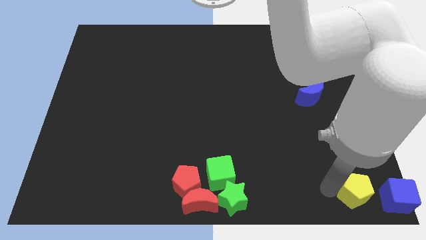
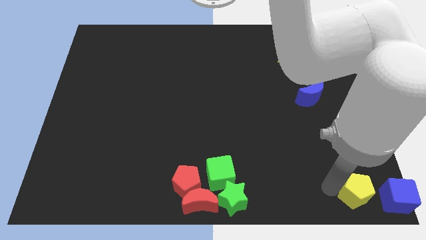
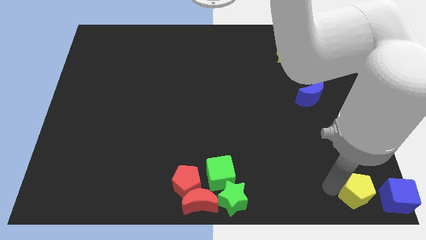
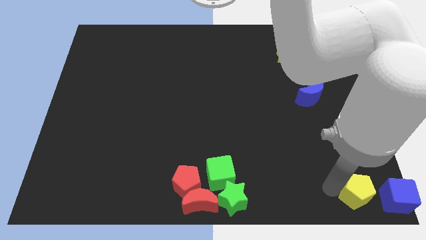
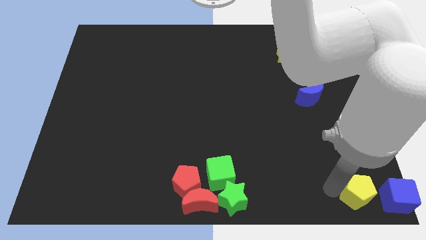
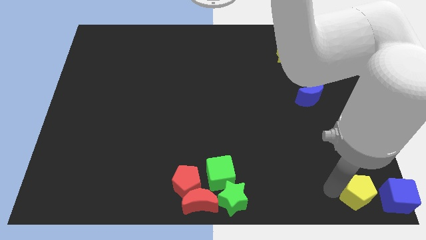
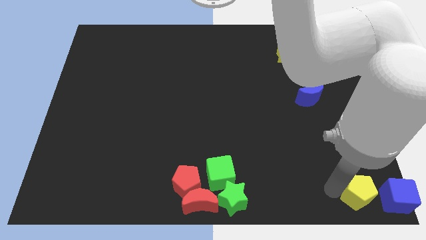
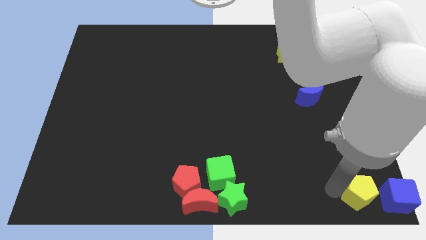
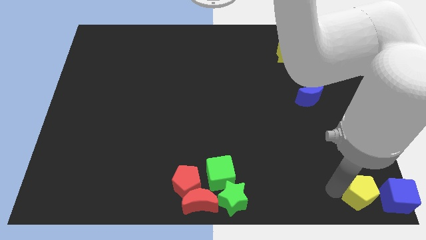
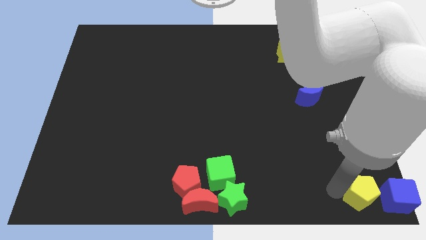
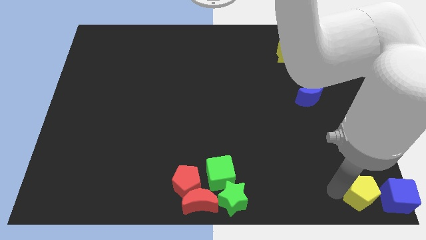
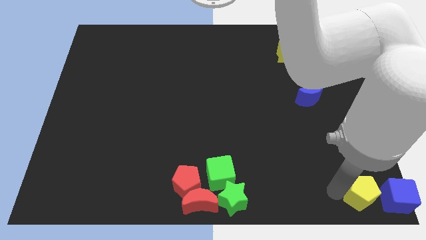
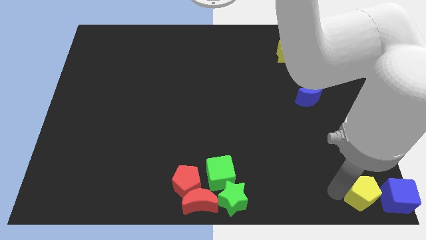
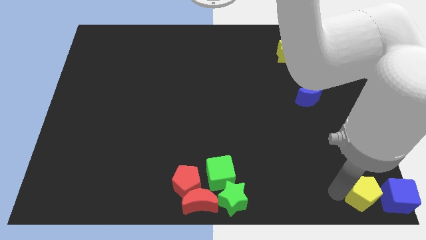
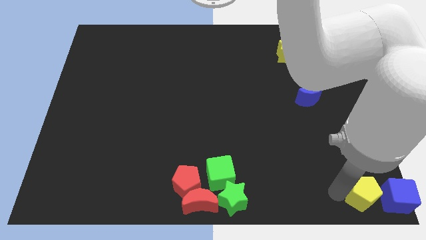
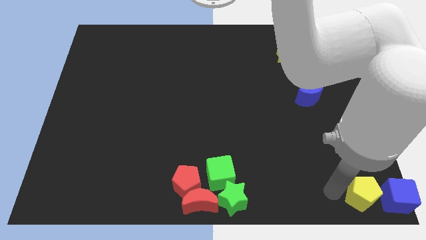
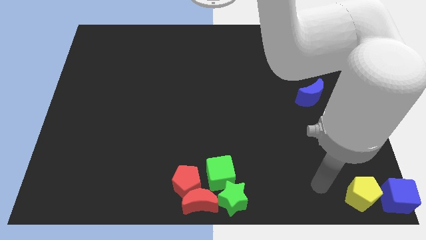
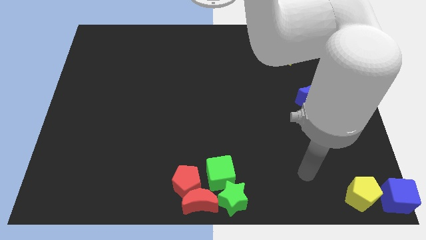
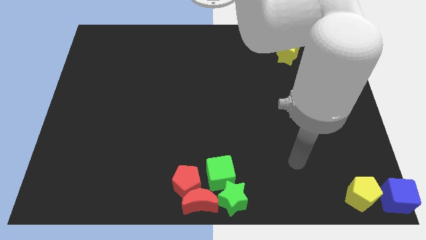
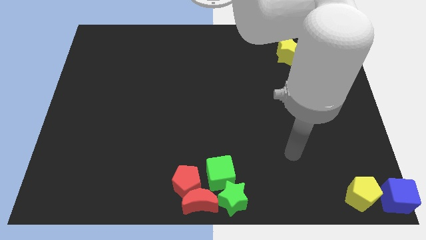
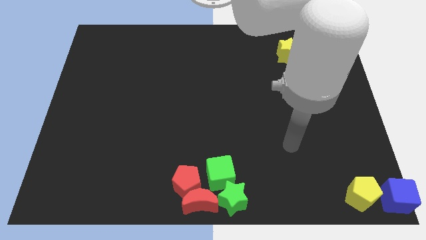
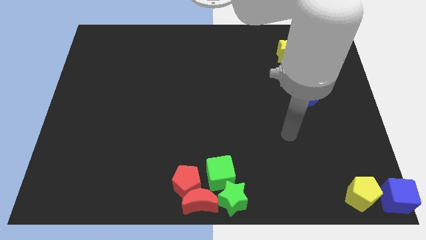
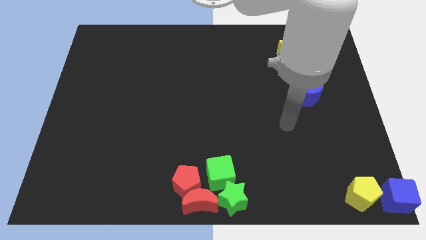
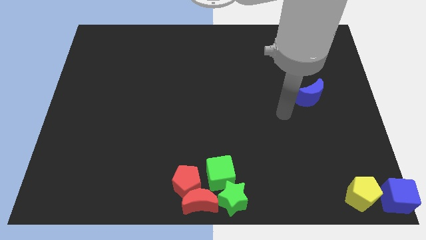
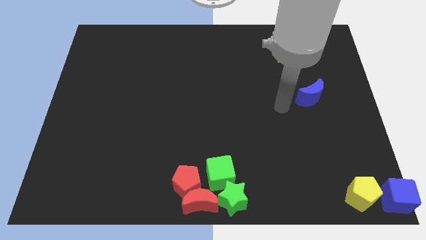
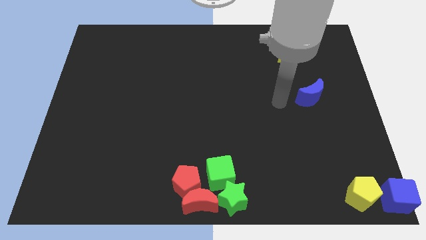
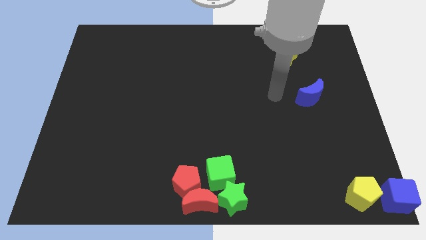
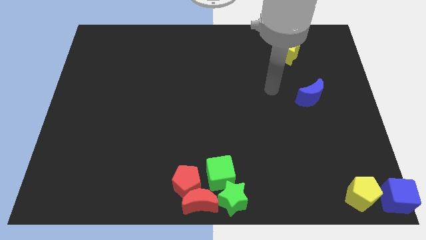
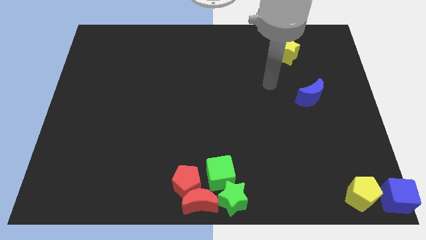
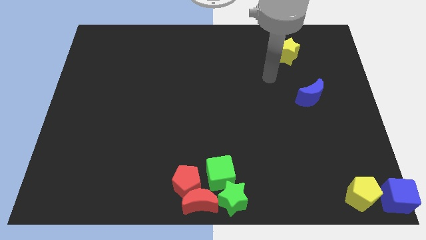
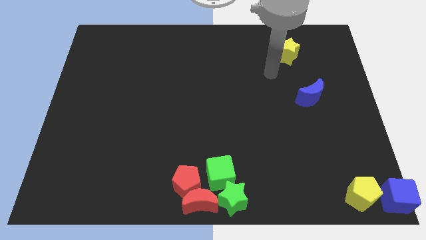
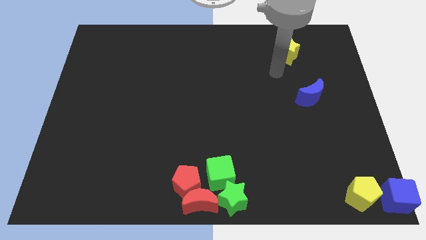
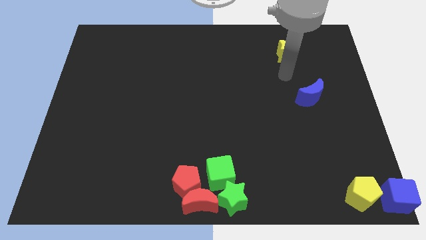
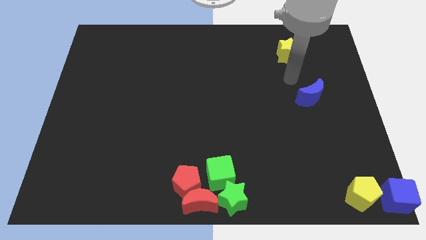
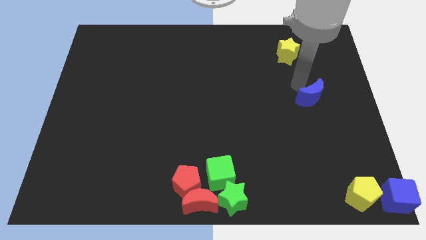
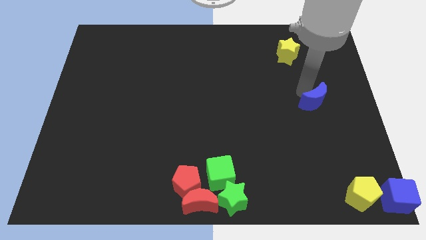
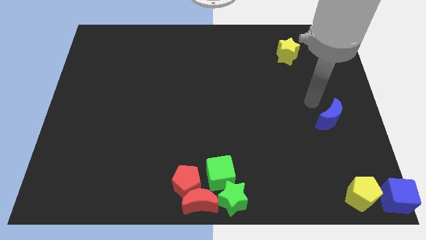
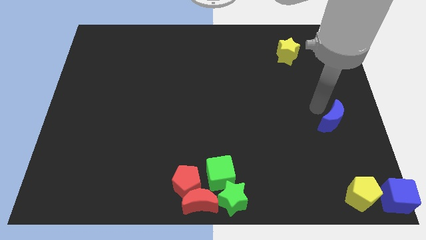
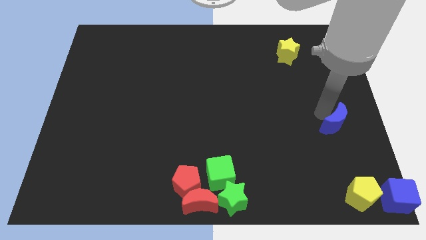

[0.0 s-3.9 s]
push the blue moon towards the bottom right corner of the board

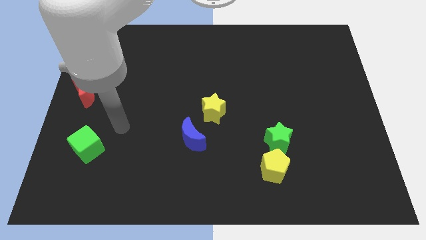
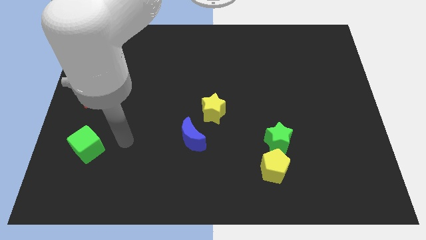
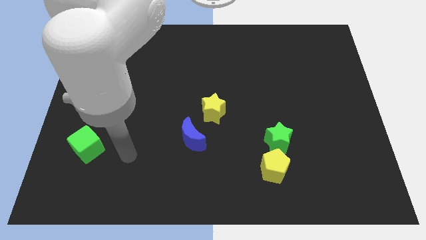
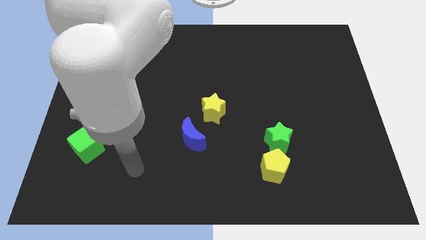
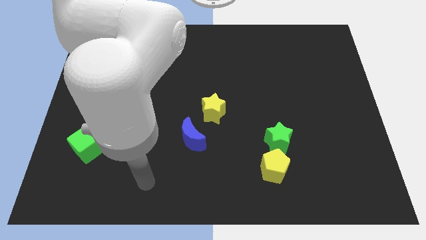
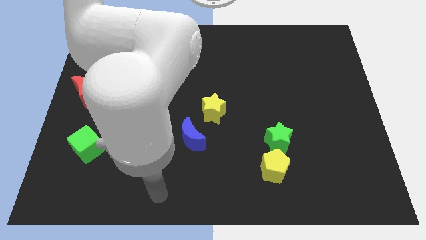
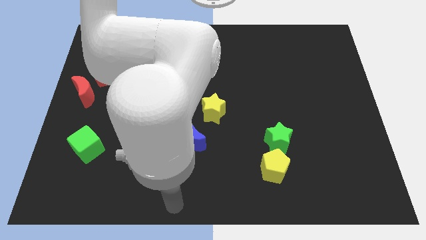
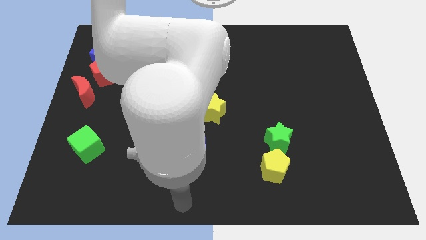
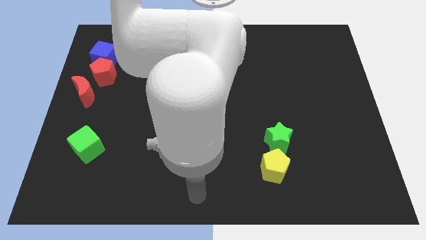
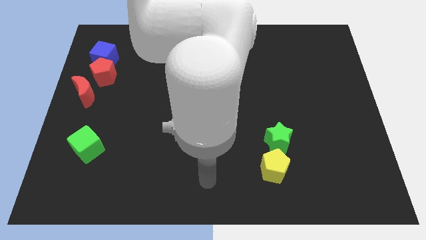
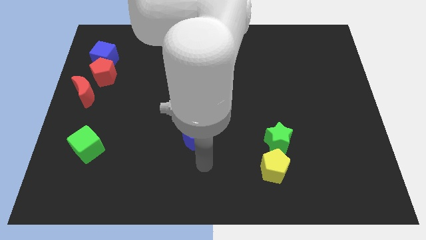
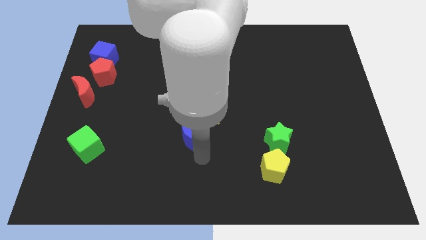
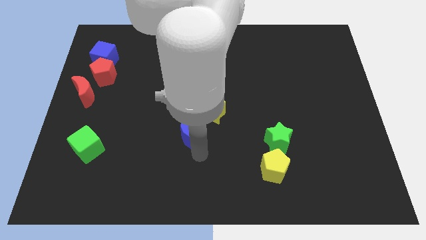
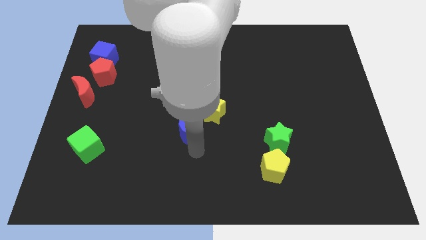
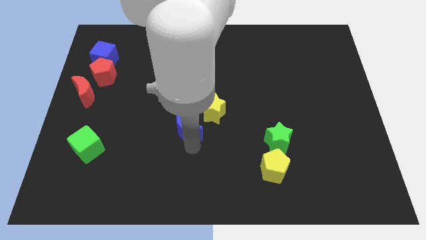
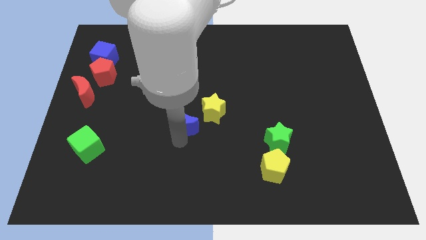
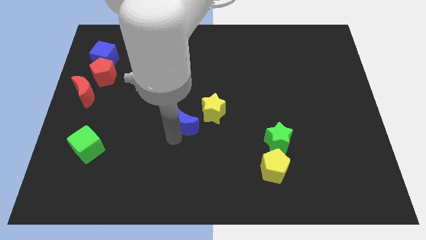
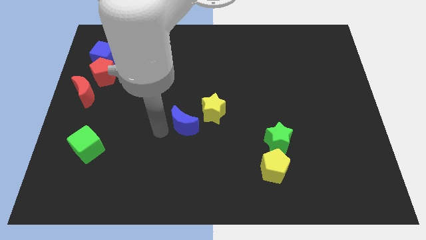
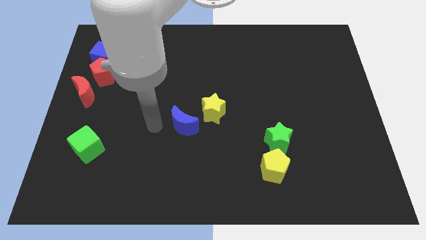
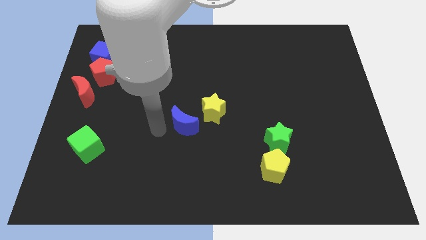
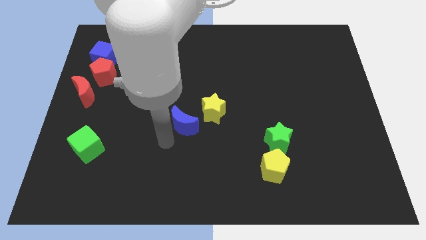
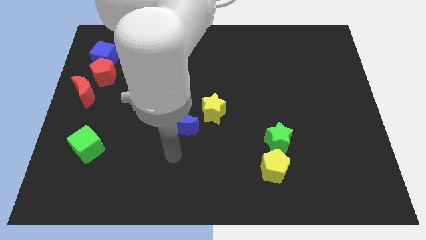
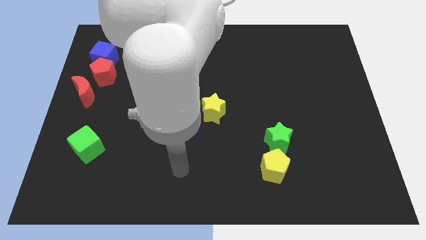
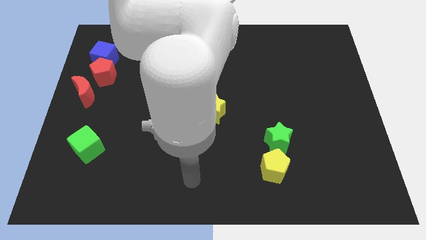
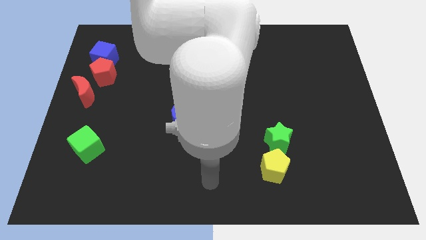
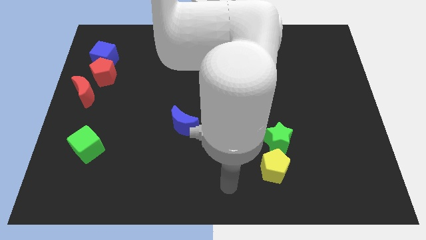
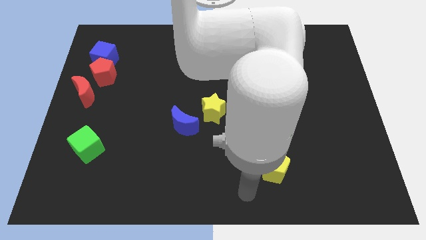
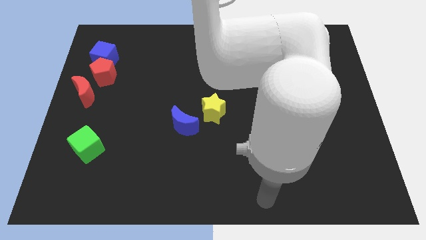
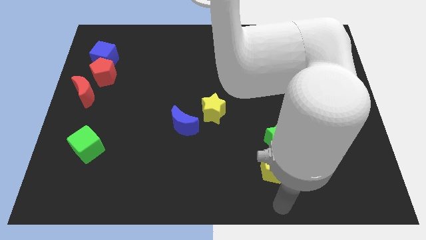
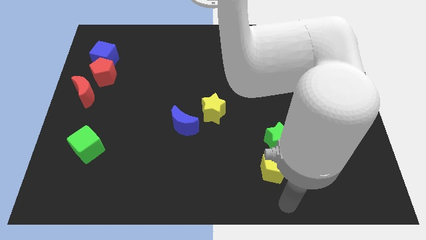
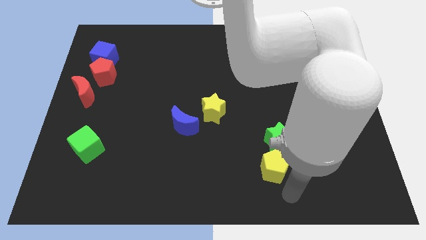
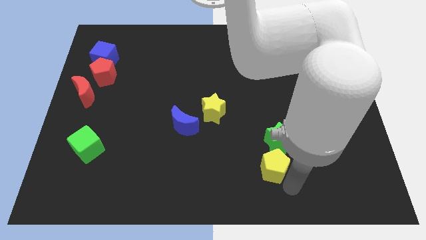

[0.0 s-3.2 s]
slide the blue crescent to the bottom left side of the yellow star

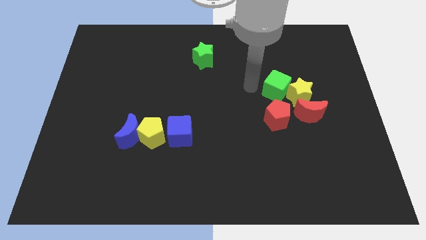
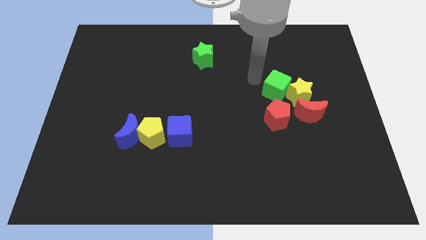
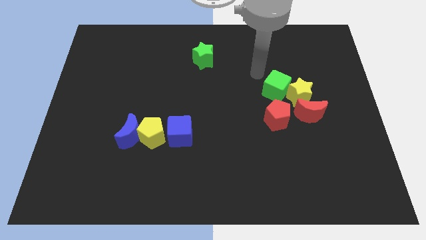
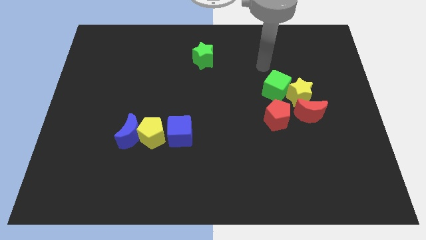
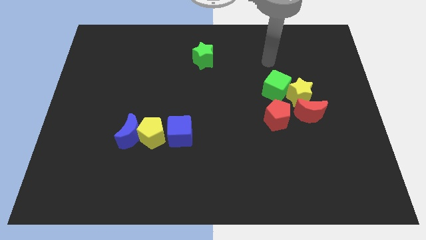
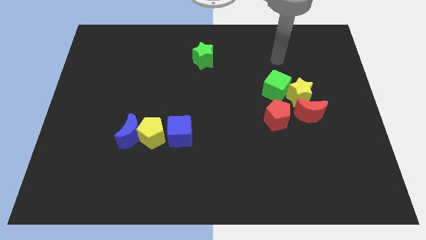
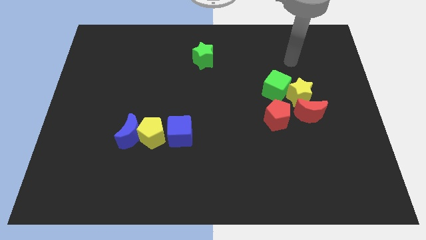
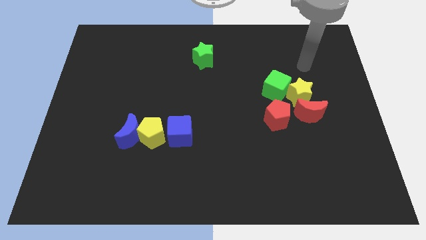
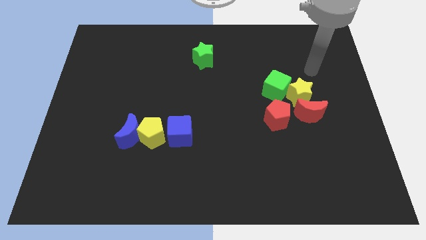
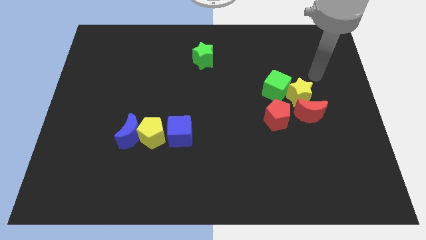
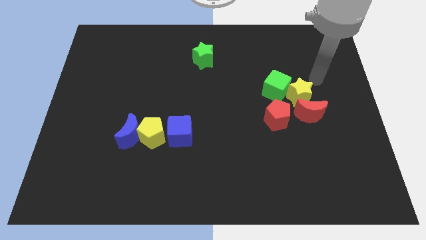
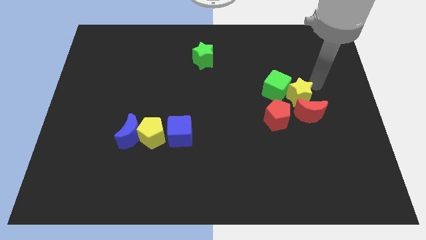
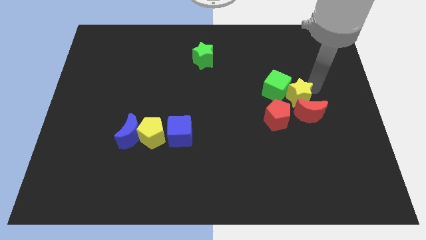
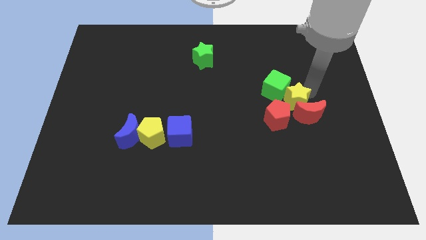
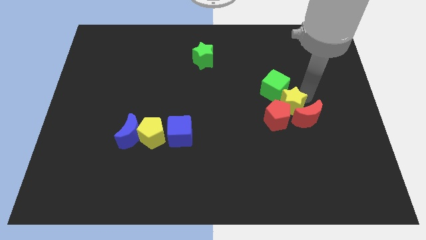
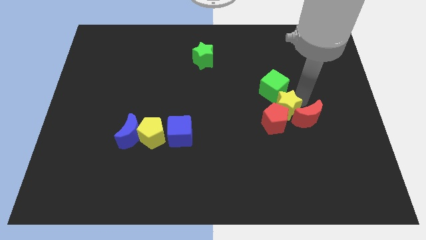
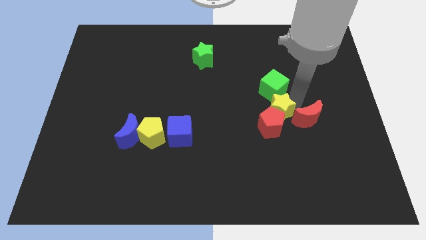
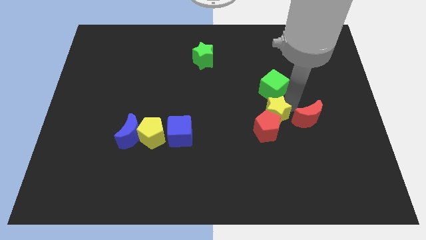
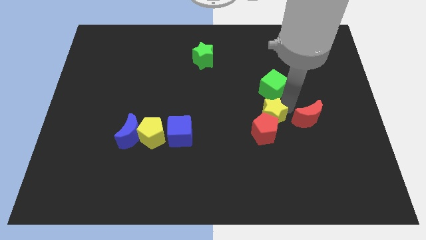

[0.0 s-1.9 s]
push the yellow star vertically bottom of the green cube
